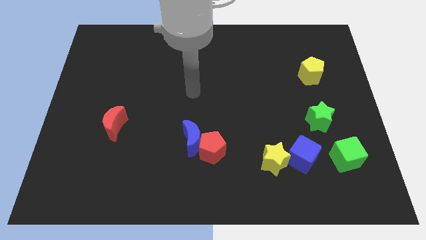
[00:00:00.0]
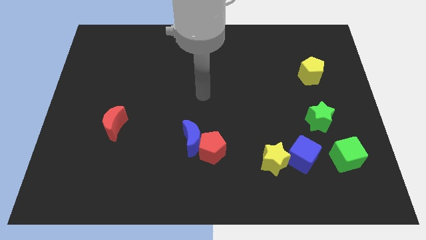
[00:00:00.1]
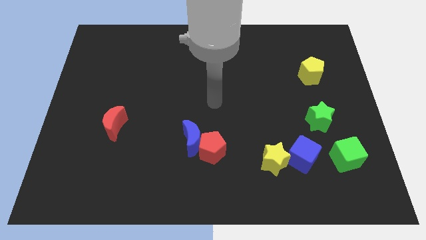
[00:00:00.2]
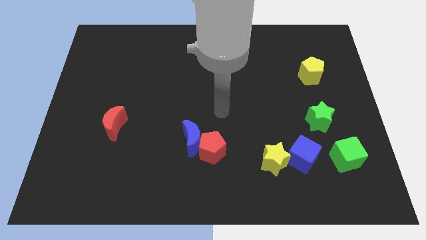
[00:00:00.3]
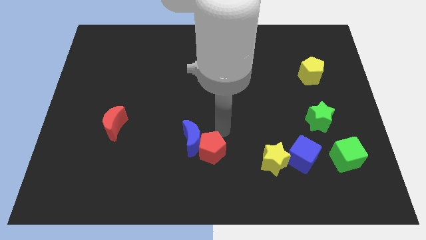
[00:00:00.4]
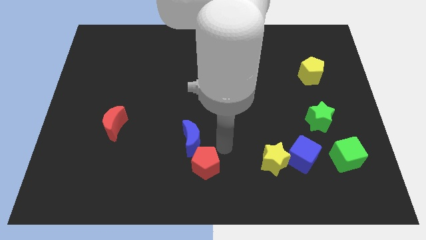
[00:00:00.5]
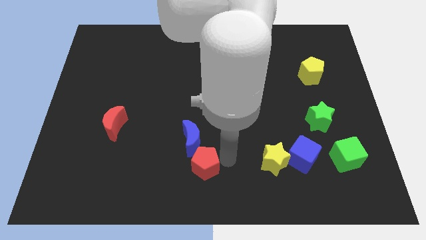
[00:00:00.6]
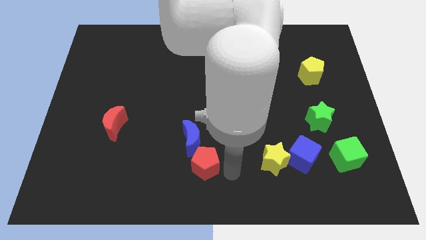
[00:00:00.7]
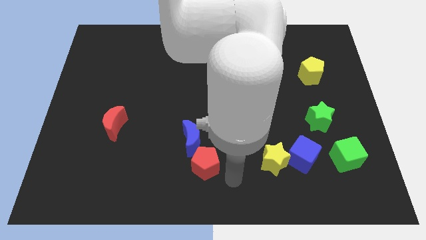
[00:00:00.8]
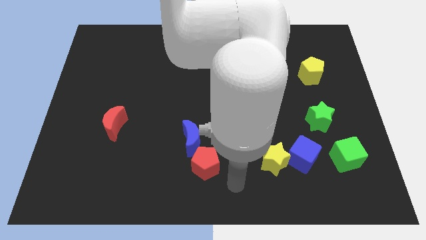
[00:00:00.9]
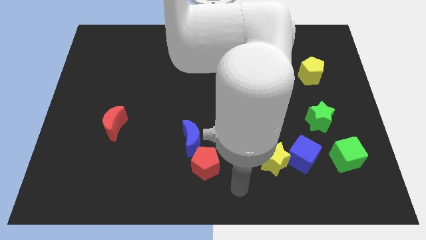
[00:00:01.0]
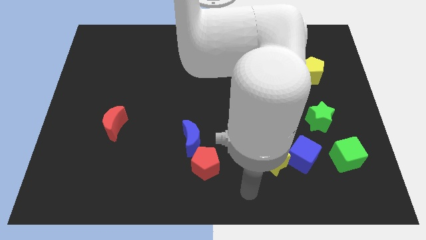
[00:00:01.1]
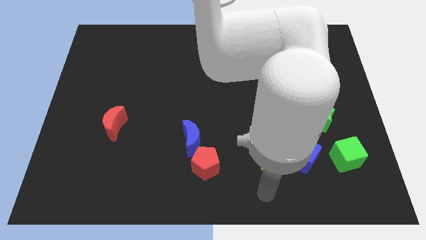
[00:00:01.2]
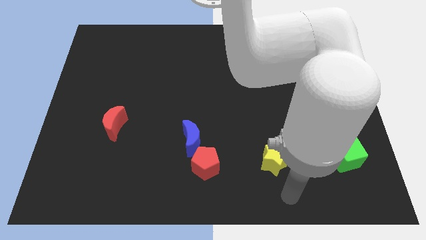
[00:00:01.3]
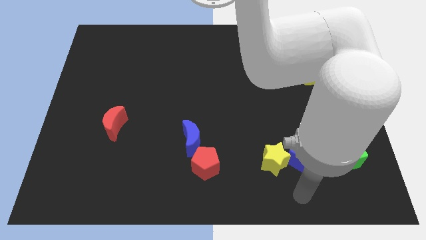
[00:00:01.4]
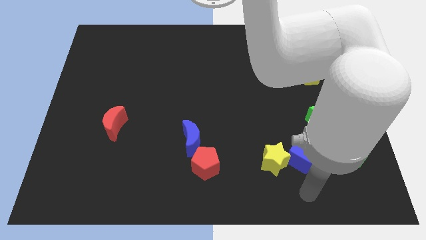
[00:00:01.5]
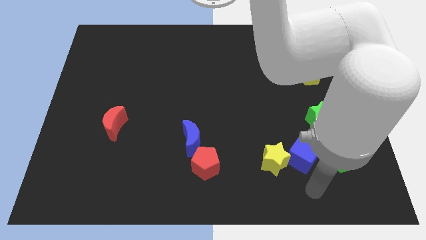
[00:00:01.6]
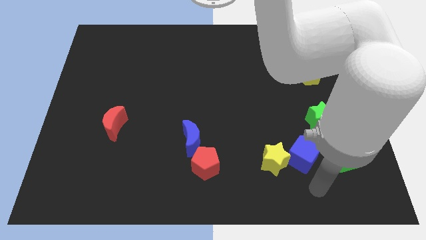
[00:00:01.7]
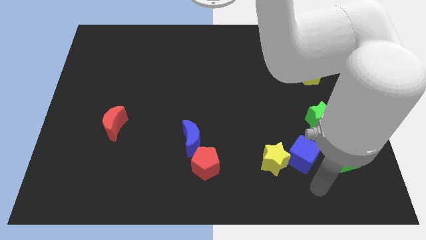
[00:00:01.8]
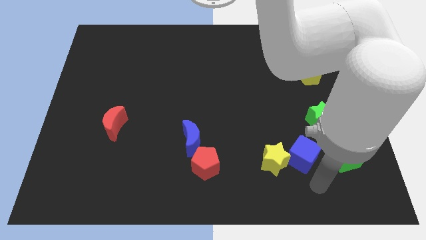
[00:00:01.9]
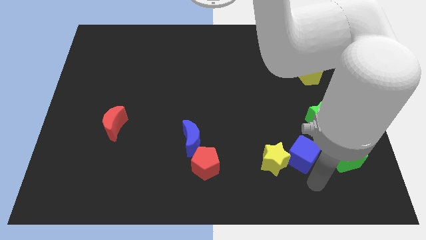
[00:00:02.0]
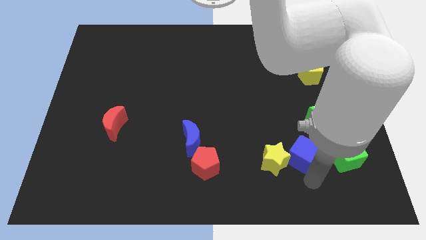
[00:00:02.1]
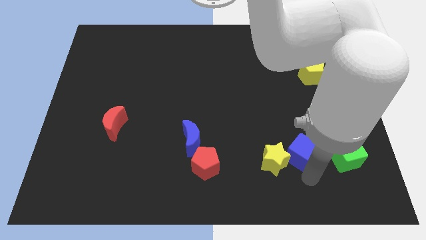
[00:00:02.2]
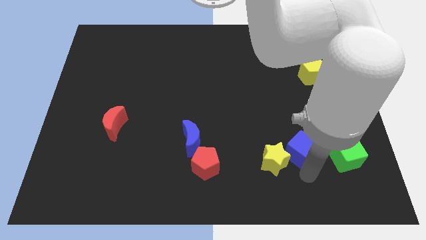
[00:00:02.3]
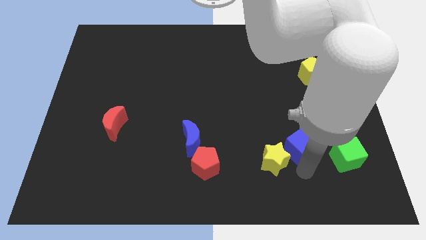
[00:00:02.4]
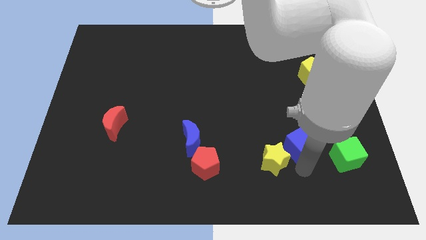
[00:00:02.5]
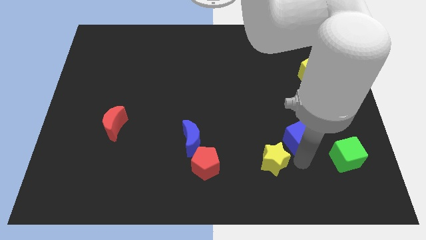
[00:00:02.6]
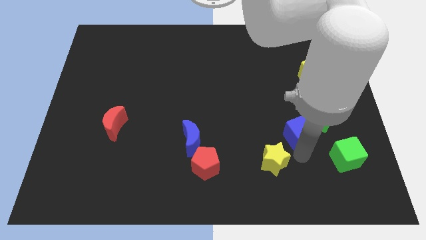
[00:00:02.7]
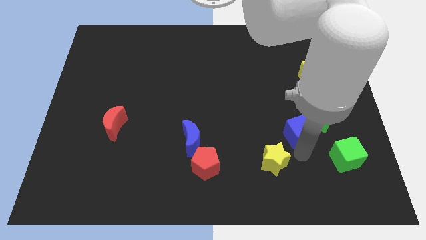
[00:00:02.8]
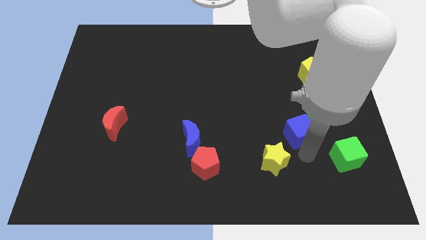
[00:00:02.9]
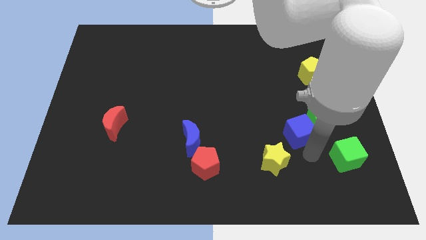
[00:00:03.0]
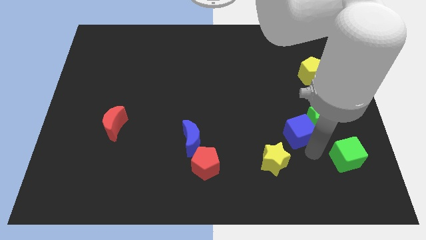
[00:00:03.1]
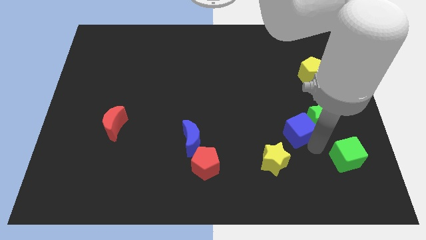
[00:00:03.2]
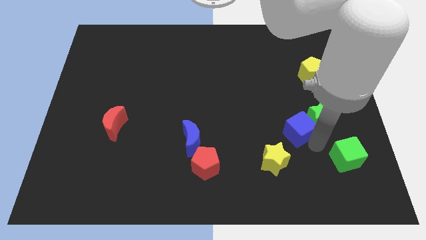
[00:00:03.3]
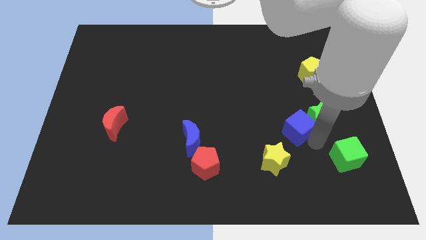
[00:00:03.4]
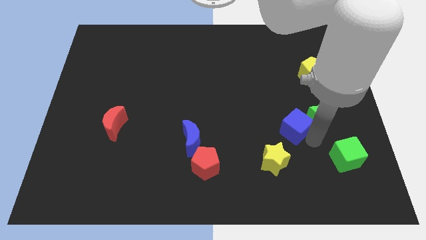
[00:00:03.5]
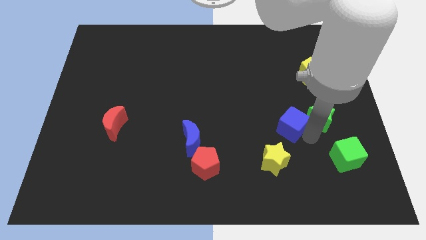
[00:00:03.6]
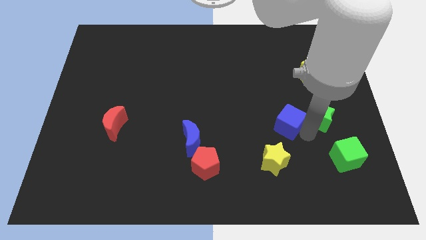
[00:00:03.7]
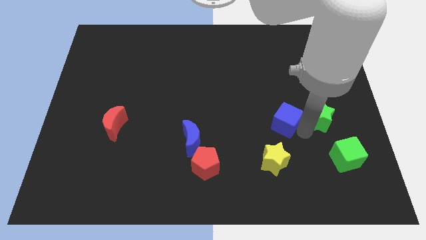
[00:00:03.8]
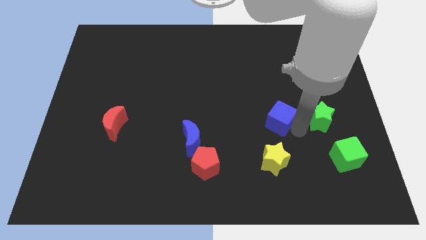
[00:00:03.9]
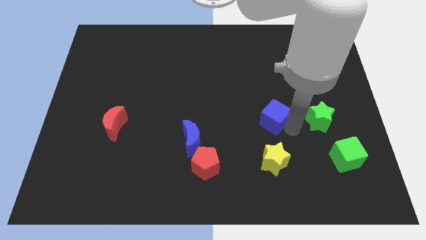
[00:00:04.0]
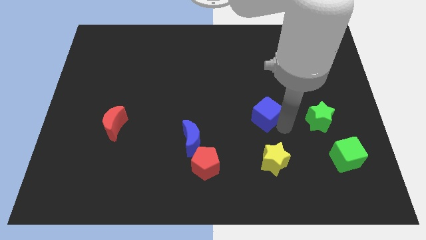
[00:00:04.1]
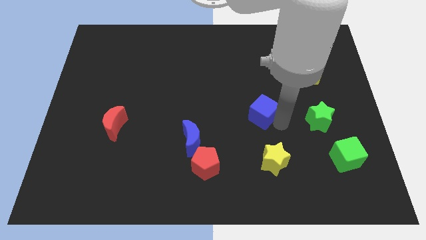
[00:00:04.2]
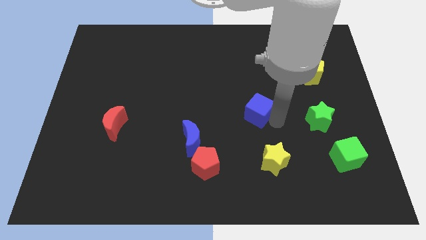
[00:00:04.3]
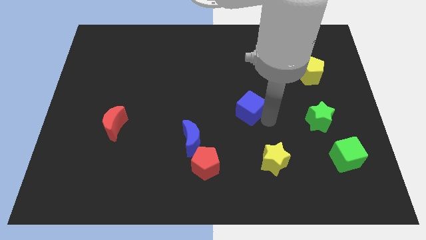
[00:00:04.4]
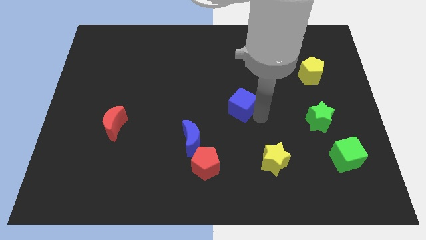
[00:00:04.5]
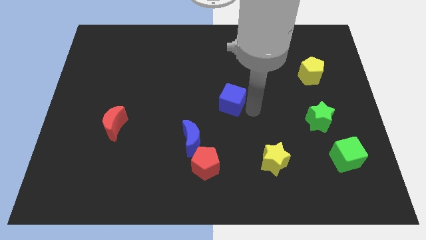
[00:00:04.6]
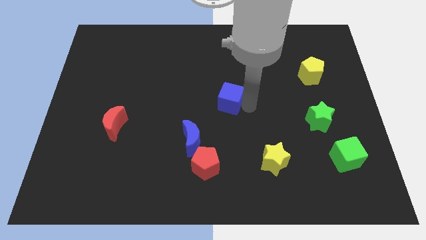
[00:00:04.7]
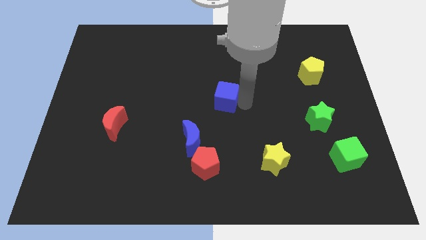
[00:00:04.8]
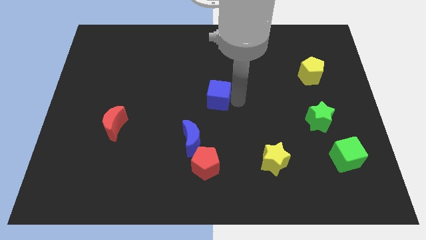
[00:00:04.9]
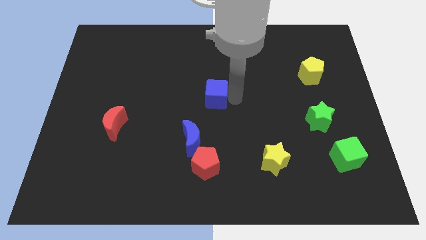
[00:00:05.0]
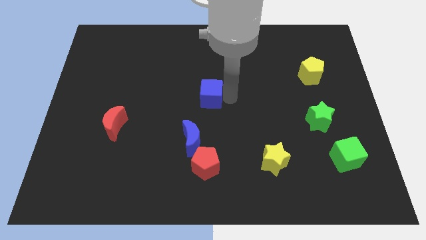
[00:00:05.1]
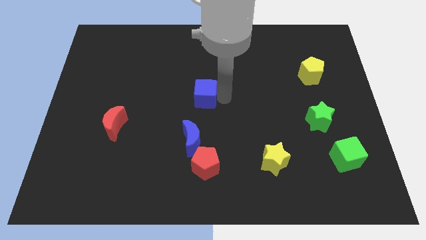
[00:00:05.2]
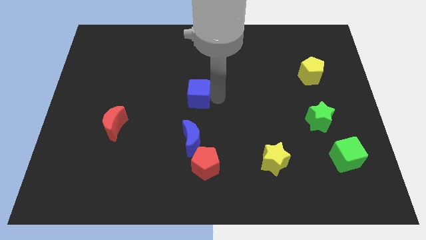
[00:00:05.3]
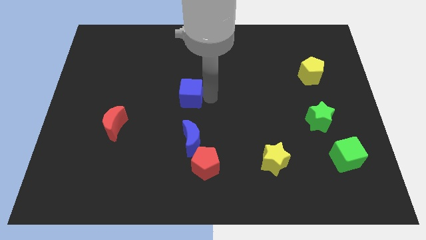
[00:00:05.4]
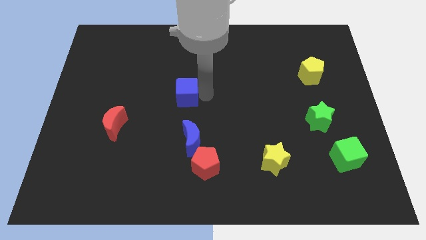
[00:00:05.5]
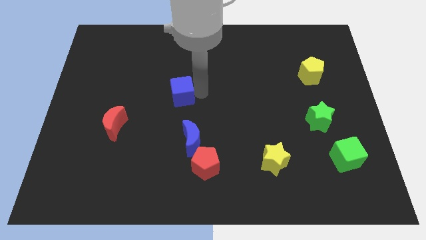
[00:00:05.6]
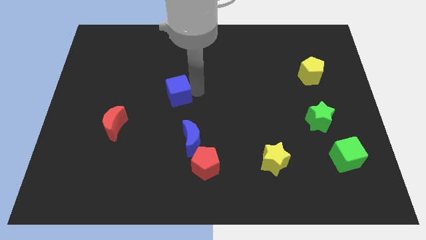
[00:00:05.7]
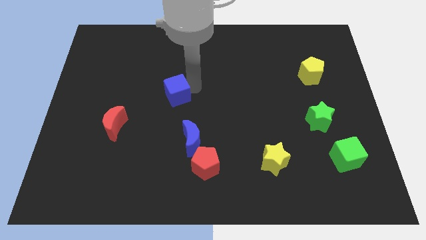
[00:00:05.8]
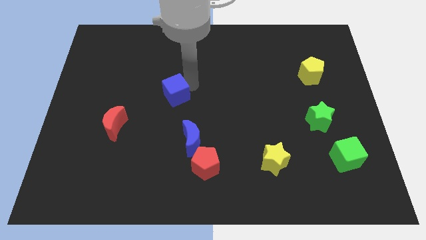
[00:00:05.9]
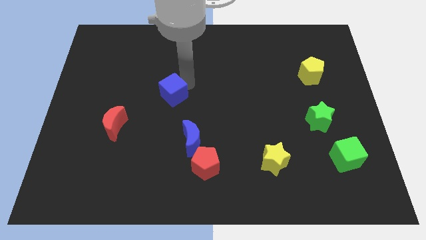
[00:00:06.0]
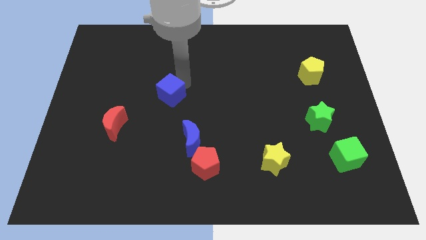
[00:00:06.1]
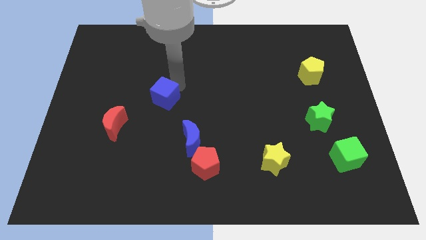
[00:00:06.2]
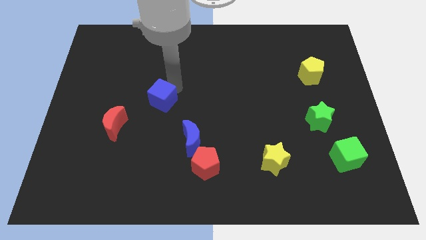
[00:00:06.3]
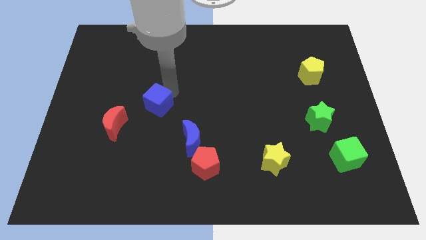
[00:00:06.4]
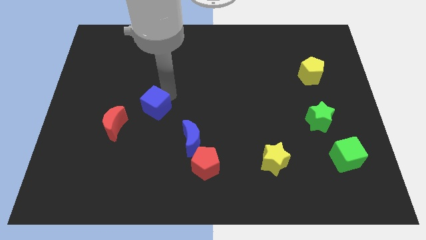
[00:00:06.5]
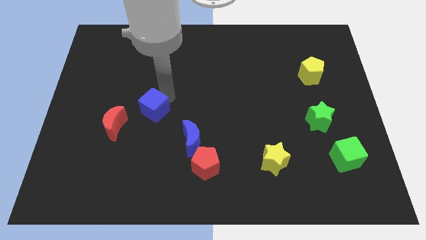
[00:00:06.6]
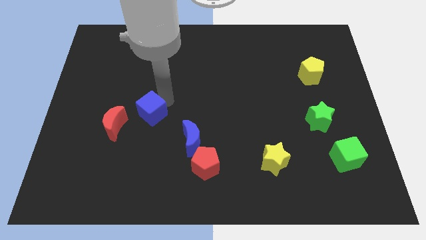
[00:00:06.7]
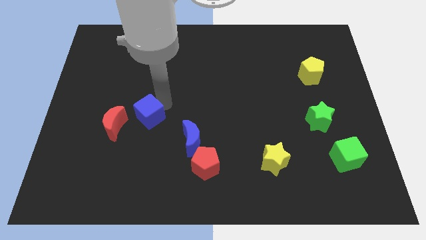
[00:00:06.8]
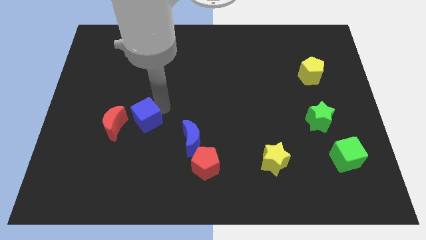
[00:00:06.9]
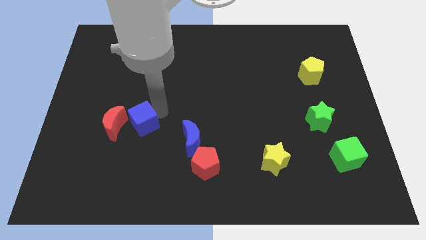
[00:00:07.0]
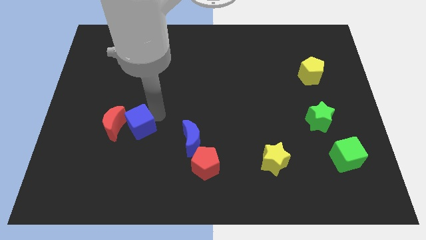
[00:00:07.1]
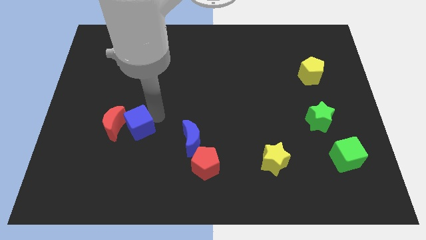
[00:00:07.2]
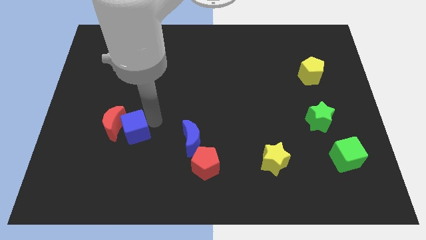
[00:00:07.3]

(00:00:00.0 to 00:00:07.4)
push the blue cube to the red moon

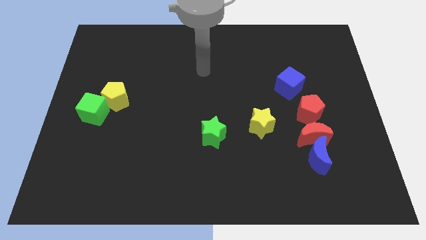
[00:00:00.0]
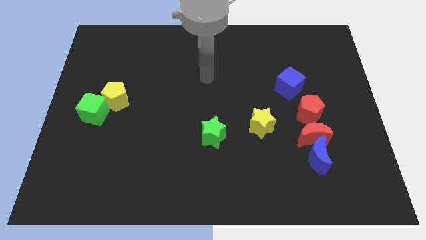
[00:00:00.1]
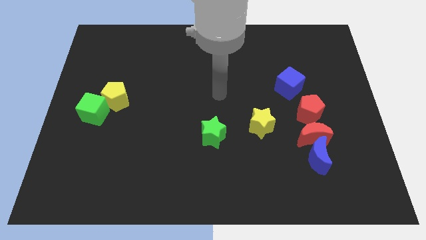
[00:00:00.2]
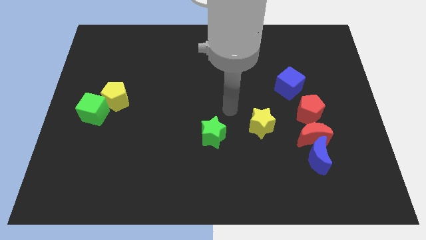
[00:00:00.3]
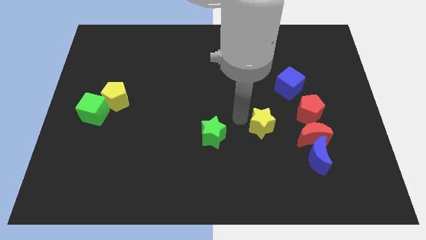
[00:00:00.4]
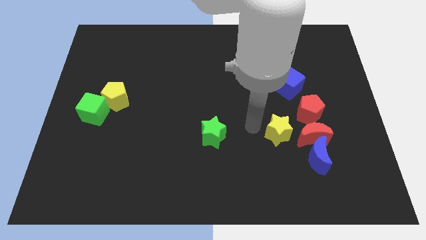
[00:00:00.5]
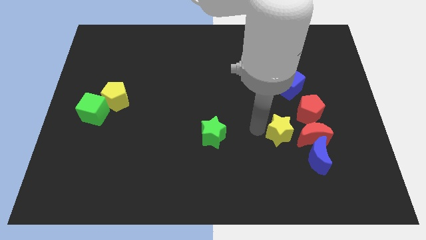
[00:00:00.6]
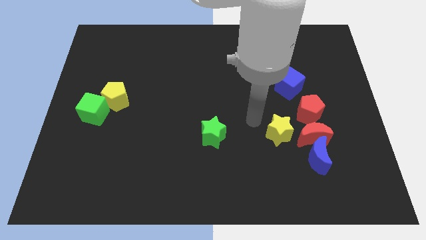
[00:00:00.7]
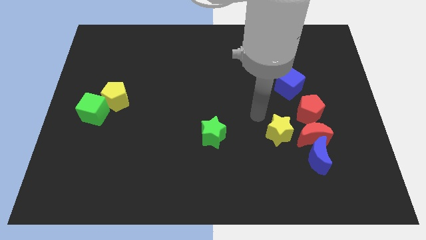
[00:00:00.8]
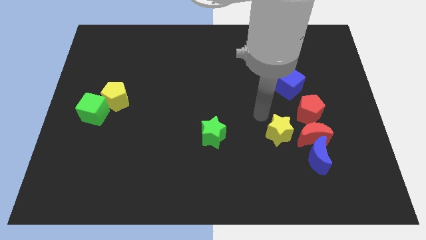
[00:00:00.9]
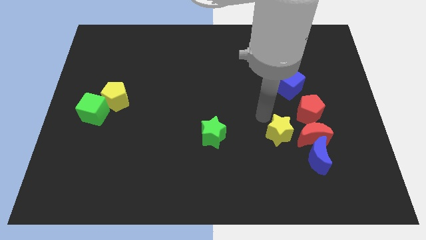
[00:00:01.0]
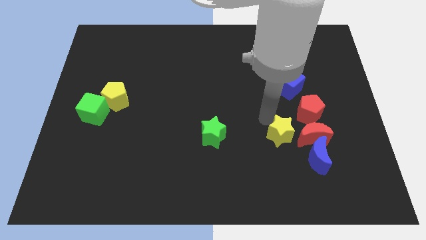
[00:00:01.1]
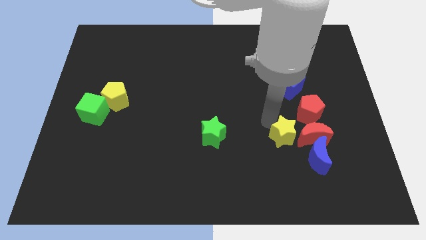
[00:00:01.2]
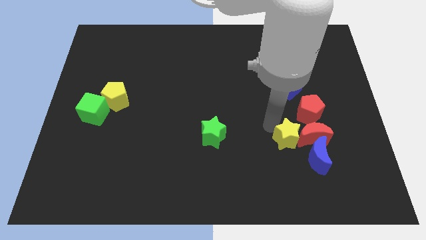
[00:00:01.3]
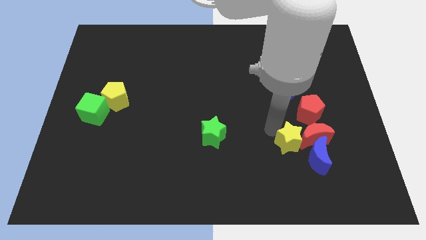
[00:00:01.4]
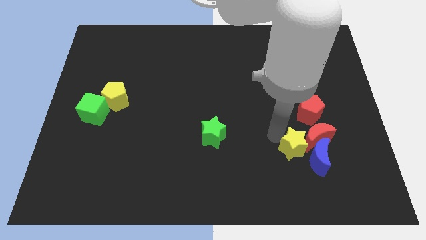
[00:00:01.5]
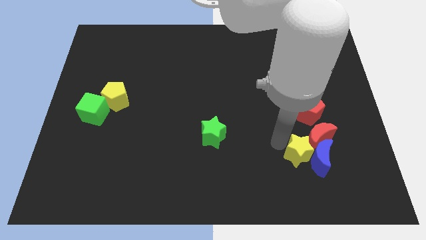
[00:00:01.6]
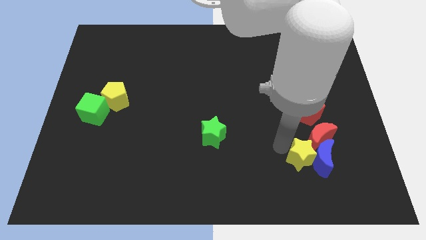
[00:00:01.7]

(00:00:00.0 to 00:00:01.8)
put the yellow star close to the blue moon
